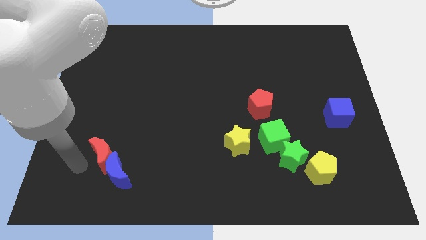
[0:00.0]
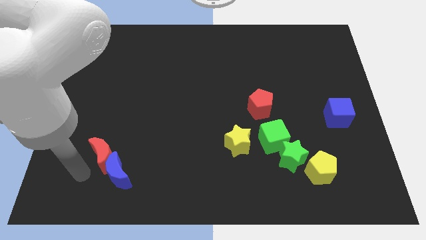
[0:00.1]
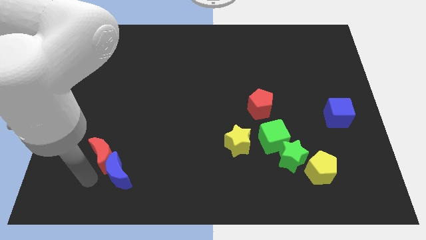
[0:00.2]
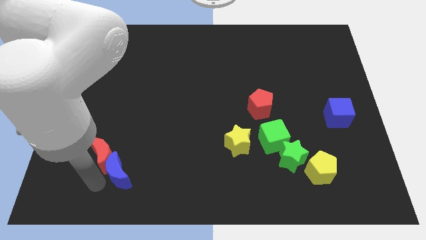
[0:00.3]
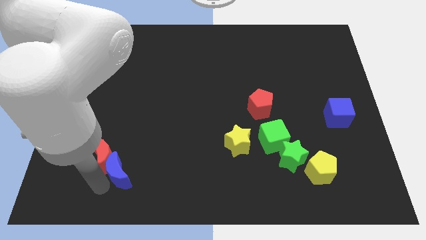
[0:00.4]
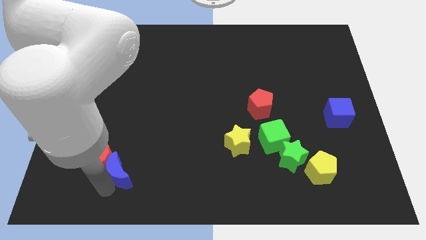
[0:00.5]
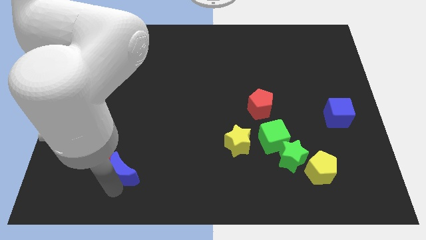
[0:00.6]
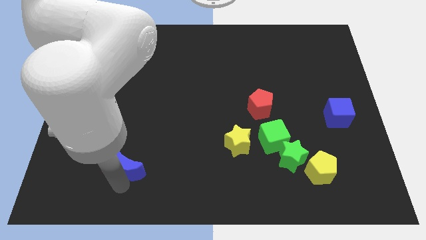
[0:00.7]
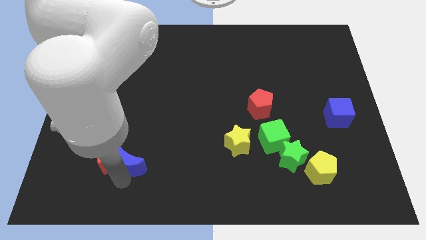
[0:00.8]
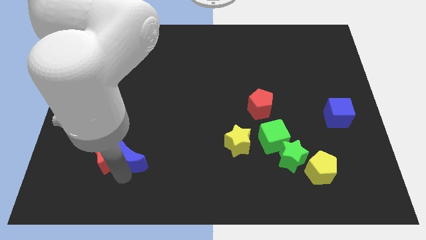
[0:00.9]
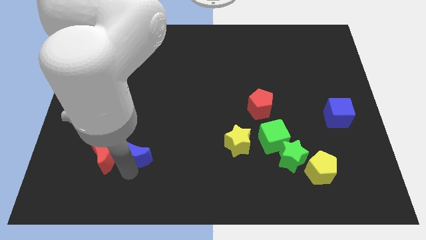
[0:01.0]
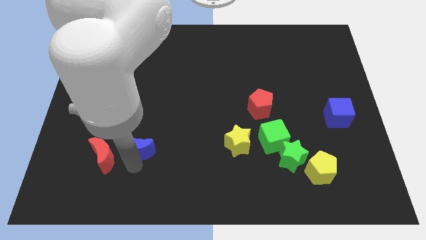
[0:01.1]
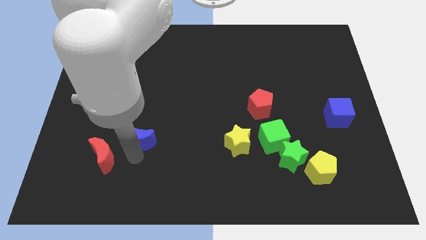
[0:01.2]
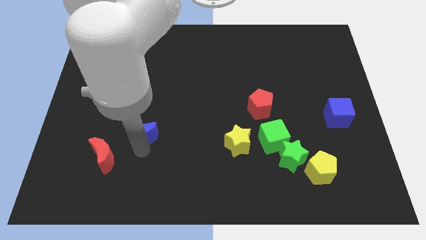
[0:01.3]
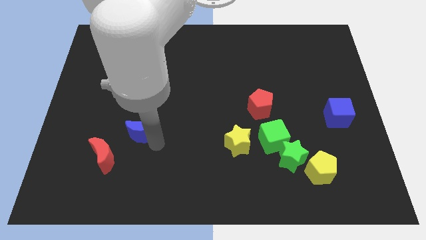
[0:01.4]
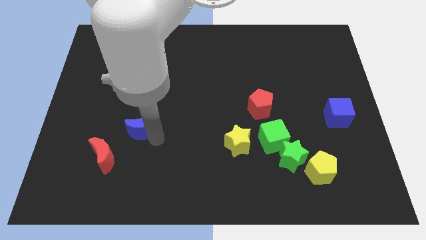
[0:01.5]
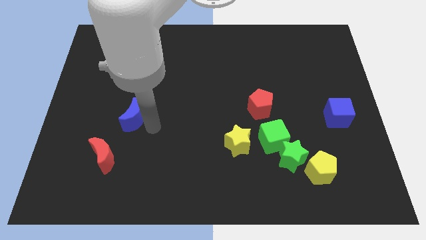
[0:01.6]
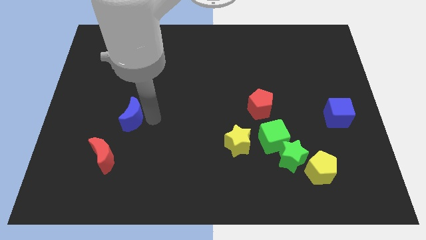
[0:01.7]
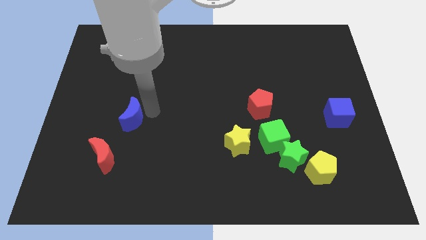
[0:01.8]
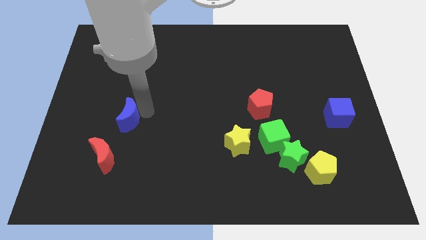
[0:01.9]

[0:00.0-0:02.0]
separate the blue moon from the red moon

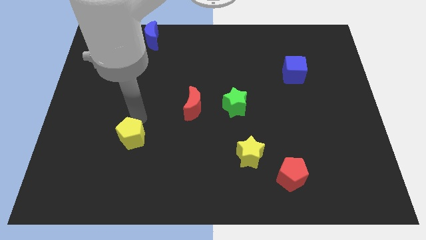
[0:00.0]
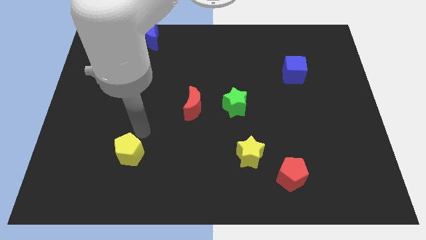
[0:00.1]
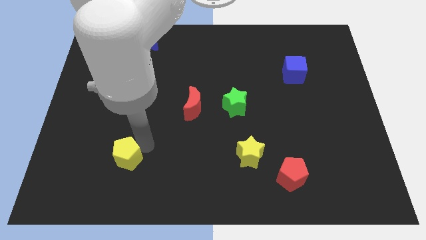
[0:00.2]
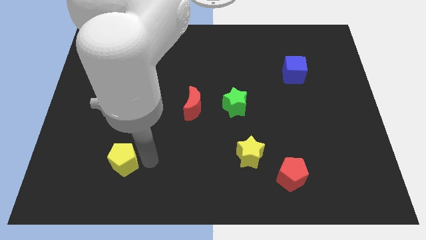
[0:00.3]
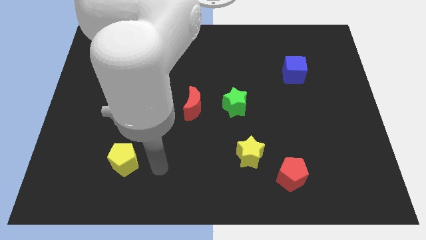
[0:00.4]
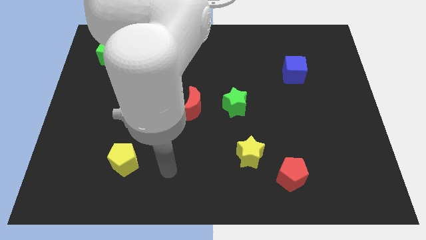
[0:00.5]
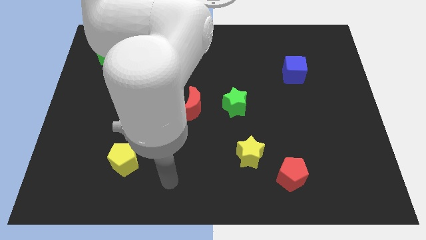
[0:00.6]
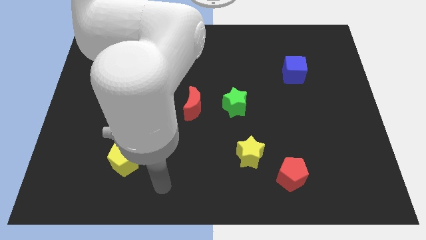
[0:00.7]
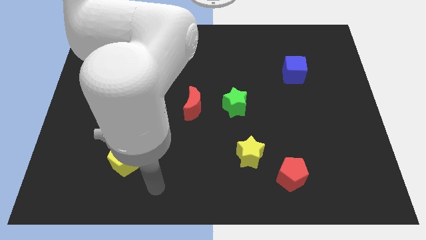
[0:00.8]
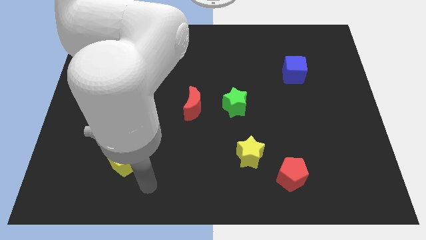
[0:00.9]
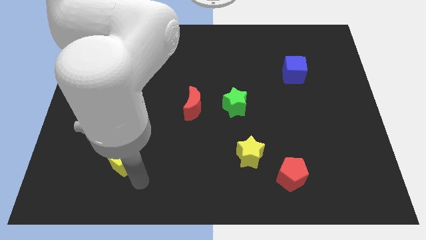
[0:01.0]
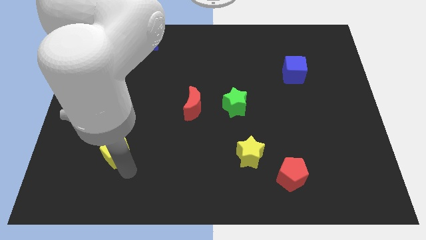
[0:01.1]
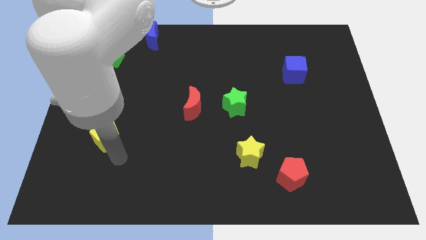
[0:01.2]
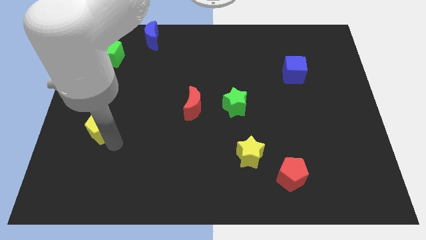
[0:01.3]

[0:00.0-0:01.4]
slide the yellow pentagon vertically below the green cube

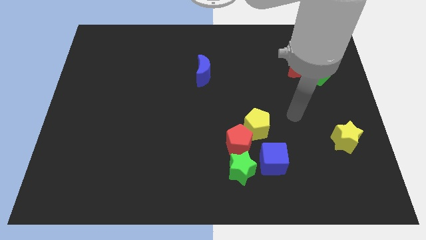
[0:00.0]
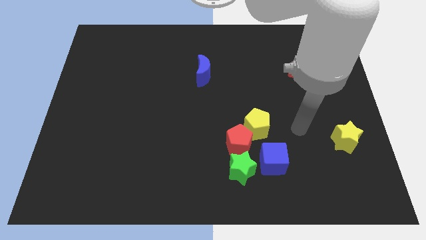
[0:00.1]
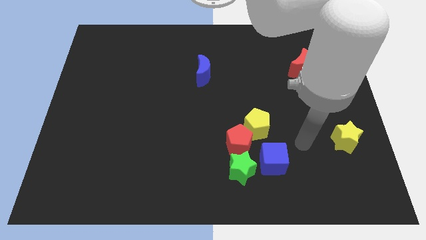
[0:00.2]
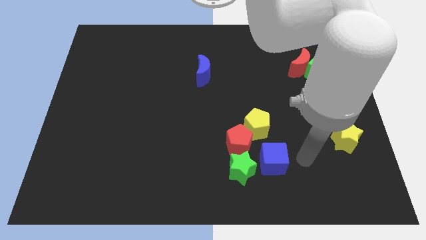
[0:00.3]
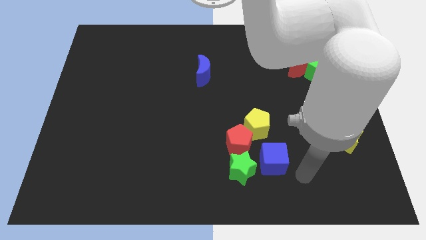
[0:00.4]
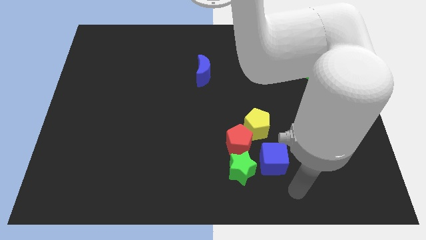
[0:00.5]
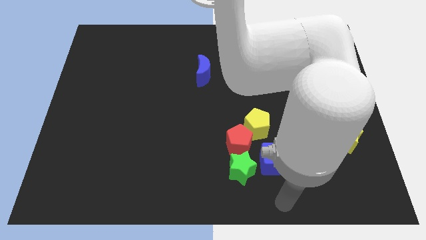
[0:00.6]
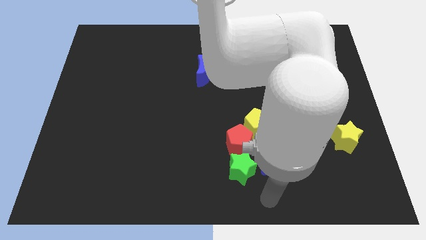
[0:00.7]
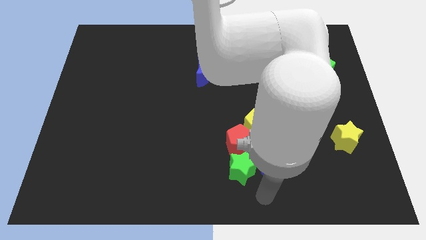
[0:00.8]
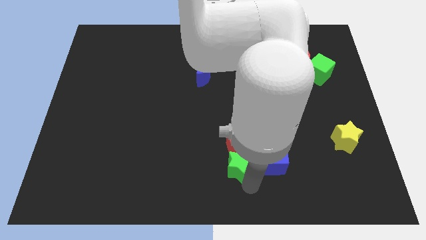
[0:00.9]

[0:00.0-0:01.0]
touch the bottom side of the green star

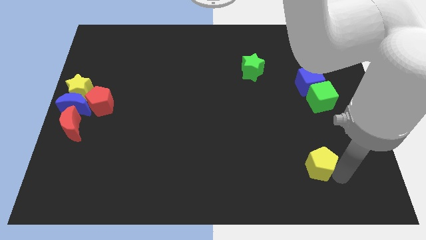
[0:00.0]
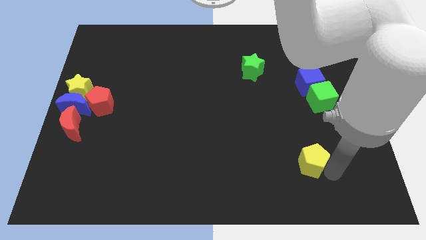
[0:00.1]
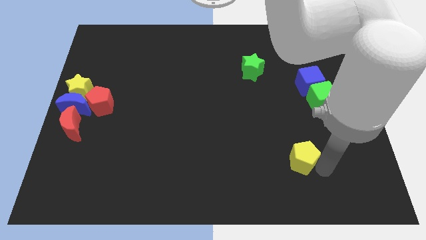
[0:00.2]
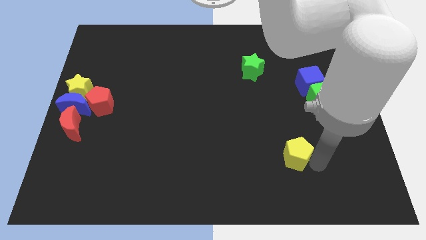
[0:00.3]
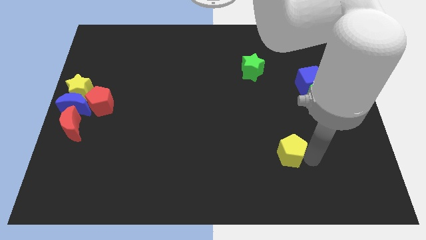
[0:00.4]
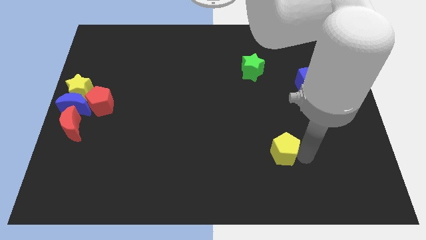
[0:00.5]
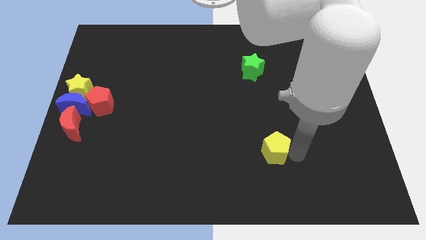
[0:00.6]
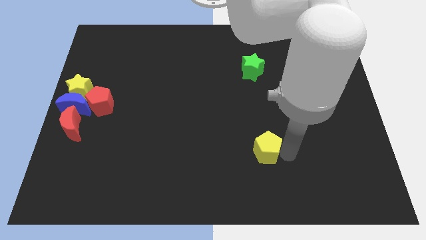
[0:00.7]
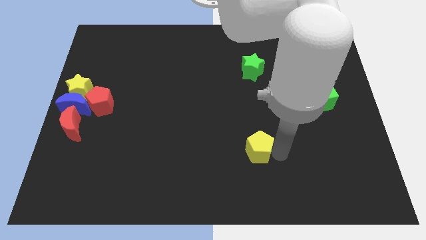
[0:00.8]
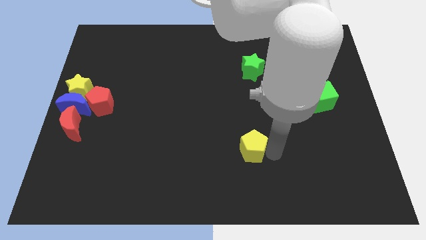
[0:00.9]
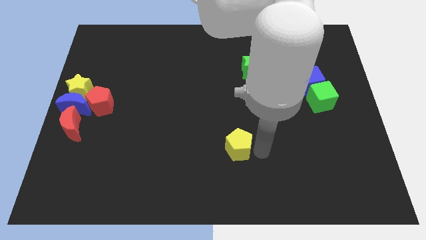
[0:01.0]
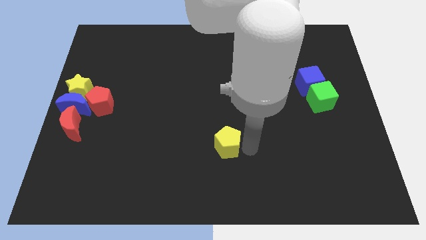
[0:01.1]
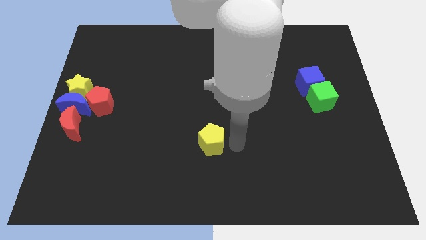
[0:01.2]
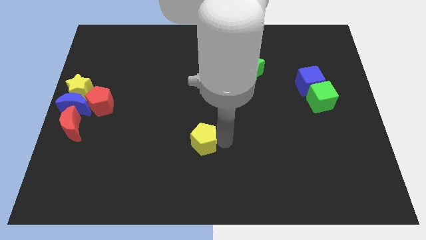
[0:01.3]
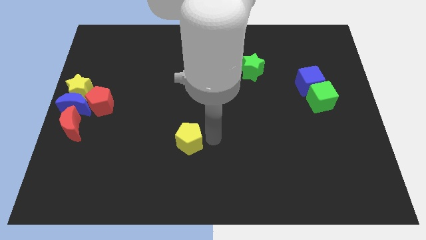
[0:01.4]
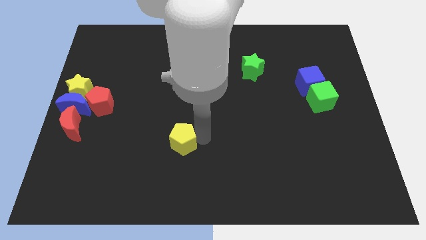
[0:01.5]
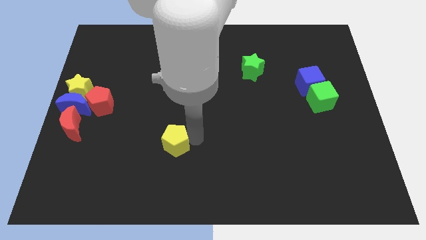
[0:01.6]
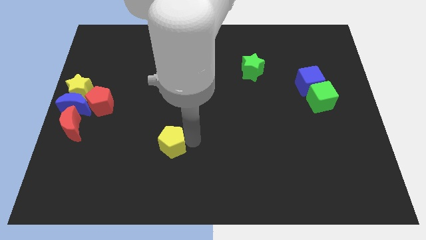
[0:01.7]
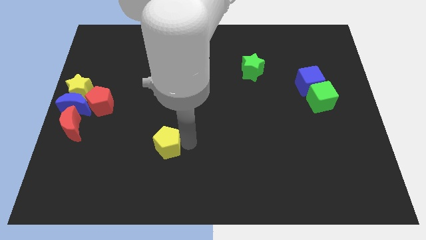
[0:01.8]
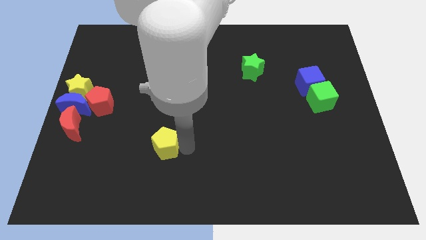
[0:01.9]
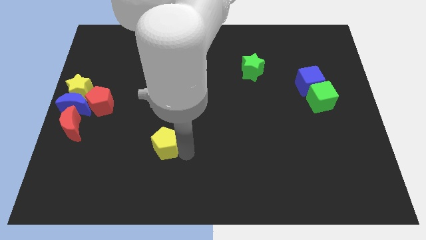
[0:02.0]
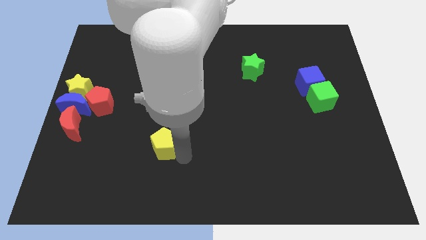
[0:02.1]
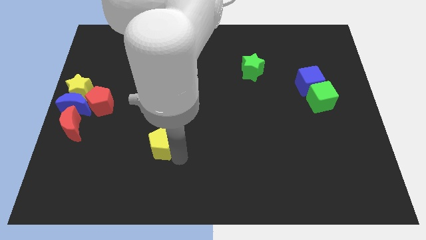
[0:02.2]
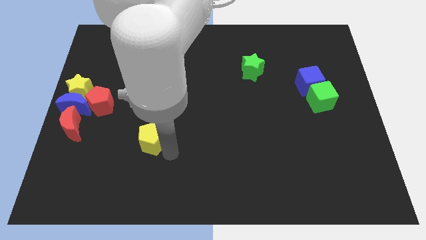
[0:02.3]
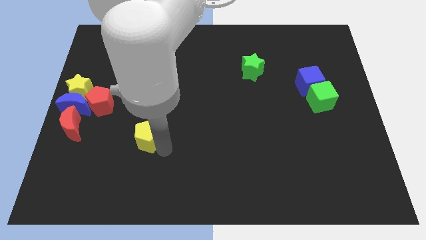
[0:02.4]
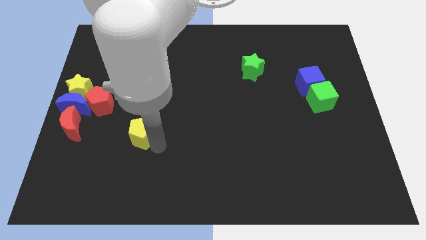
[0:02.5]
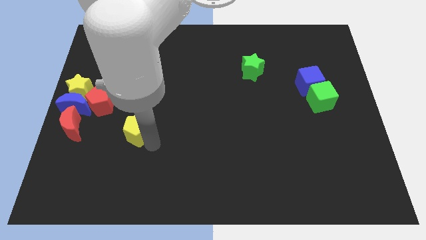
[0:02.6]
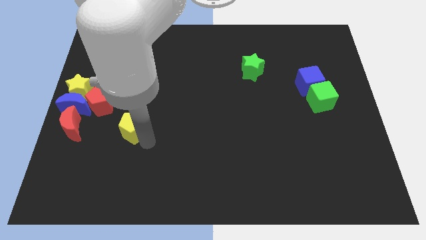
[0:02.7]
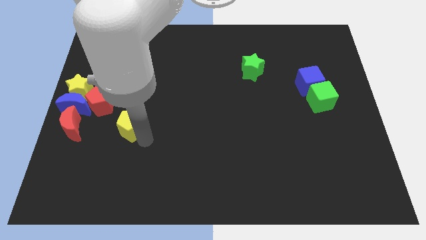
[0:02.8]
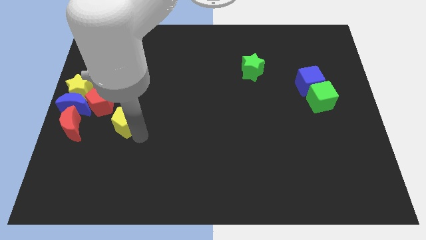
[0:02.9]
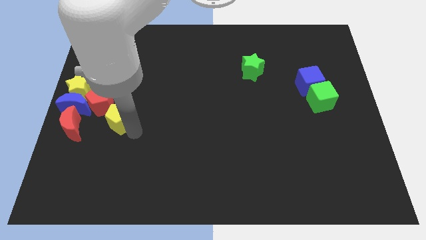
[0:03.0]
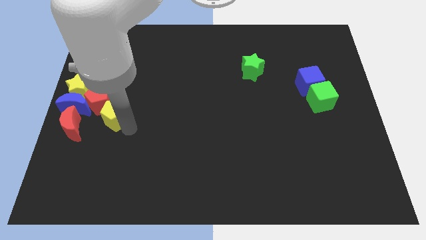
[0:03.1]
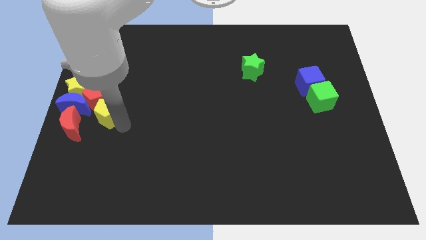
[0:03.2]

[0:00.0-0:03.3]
push the yellow pentagon into the red pentagon

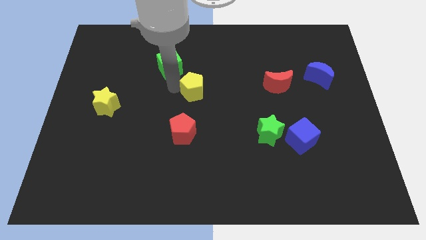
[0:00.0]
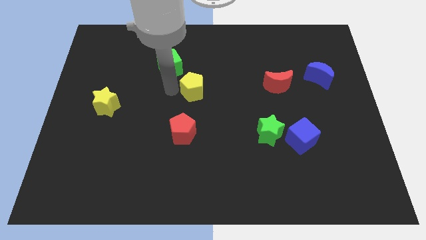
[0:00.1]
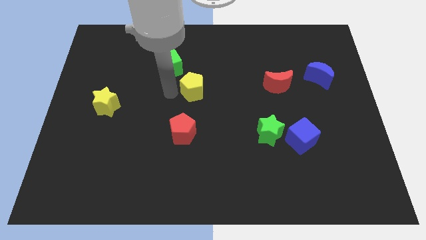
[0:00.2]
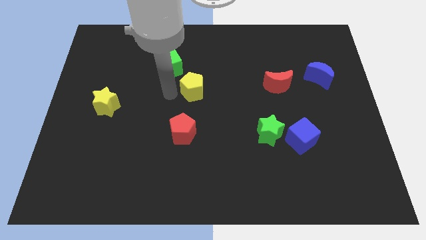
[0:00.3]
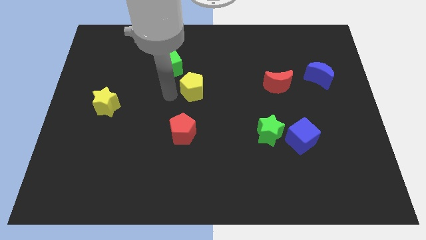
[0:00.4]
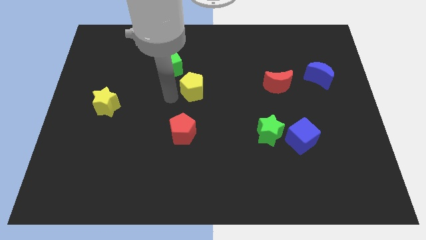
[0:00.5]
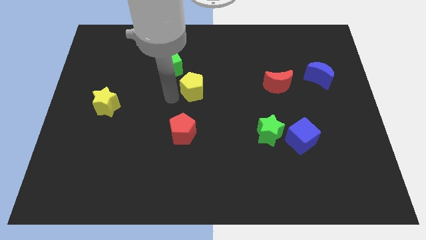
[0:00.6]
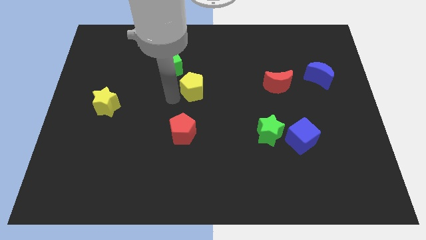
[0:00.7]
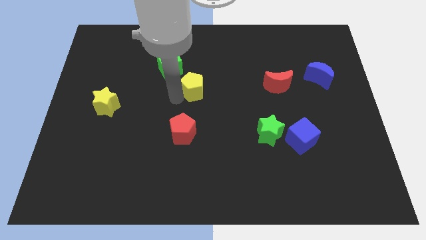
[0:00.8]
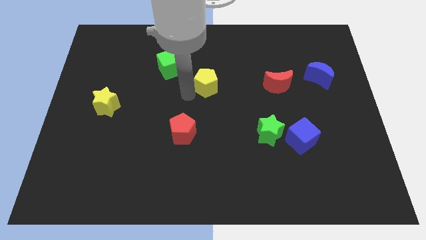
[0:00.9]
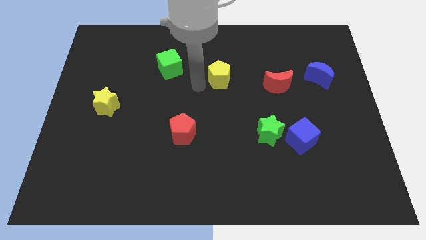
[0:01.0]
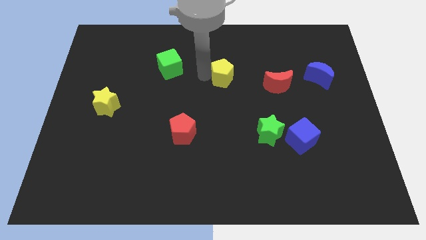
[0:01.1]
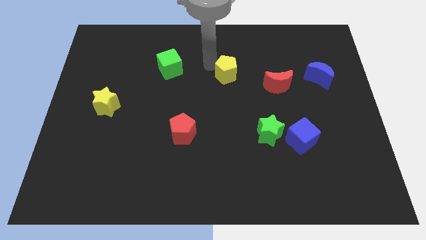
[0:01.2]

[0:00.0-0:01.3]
push the yellow pentagon to the left side of the red moon
